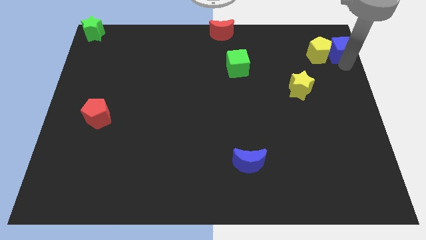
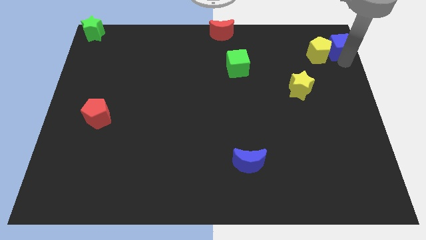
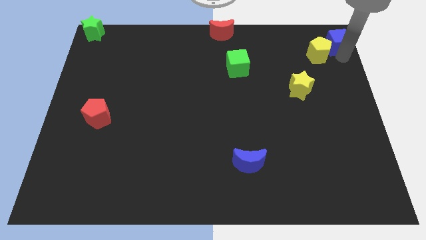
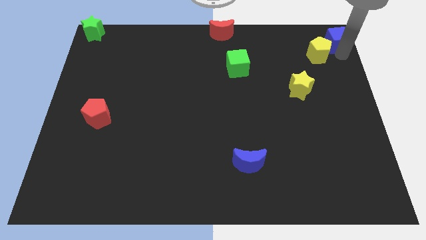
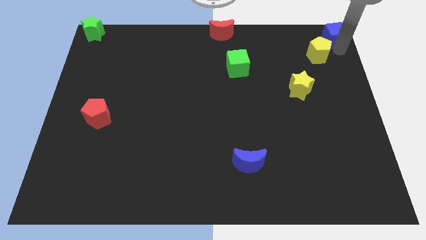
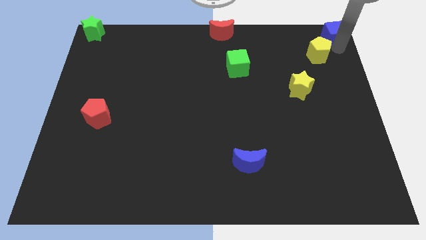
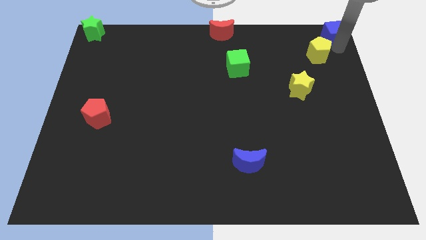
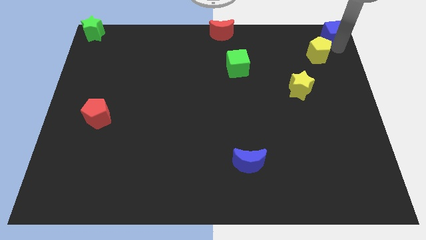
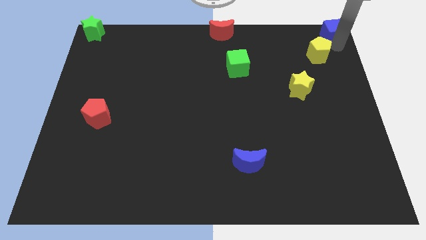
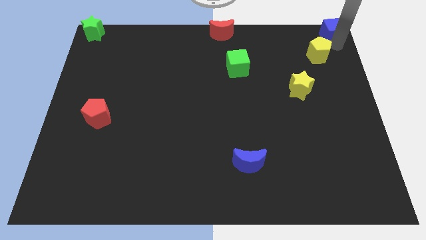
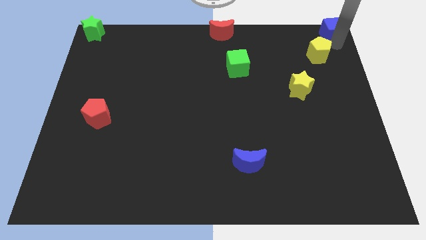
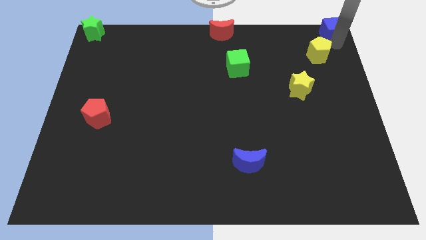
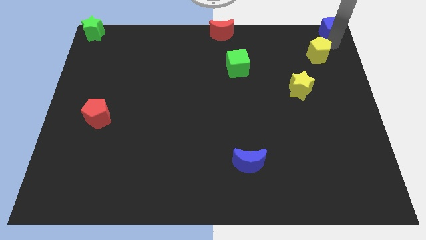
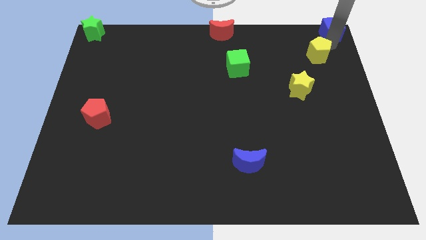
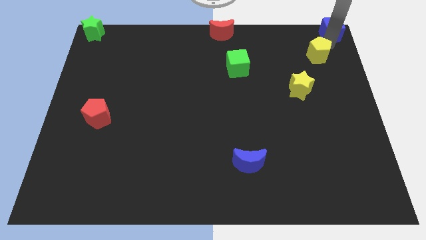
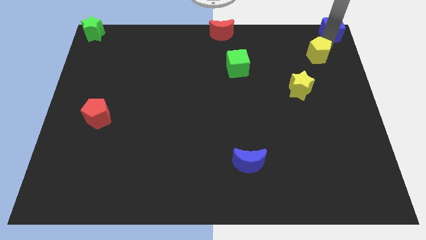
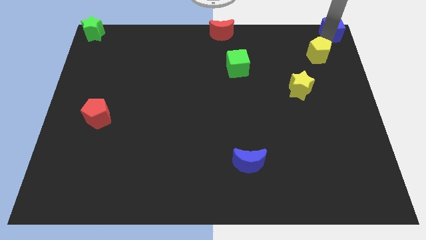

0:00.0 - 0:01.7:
move the blue cube towards the top right of the board

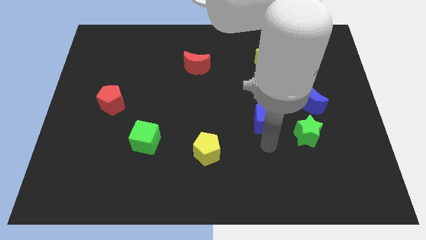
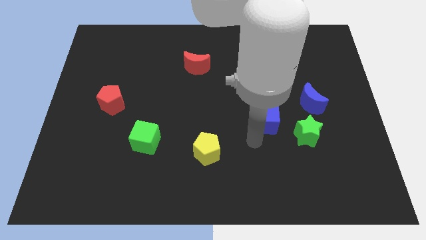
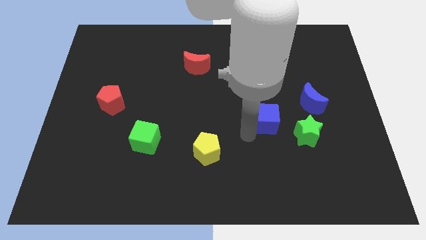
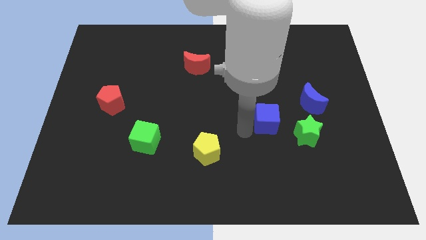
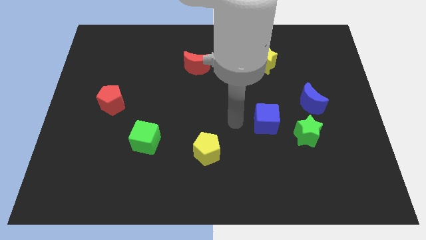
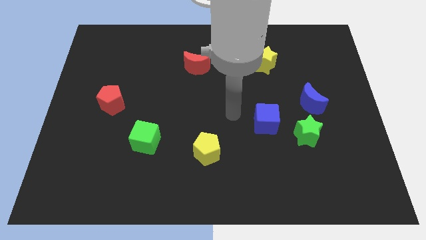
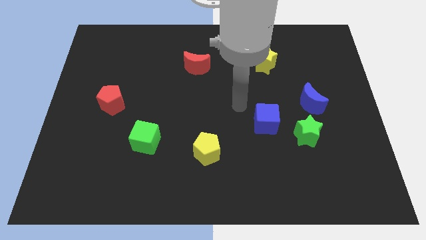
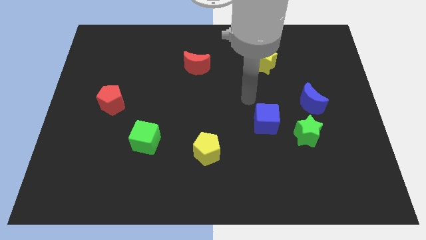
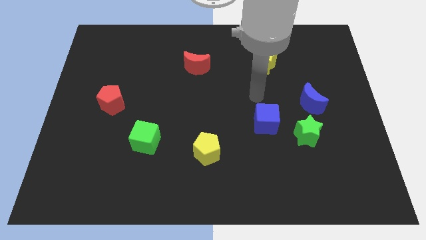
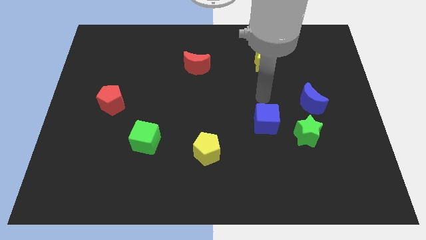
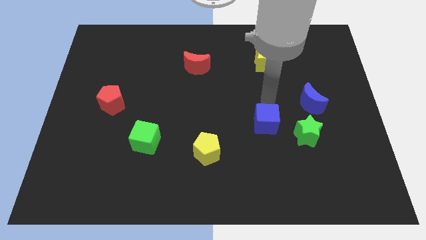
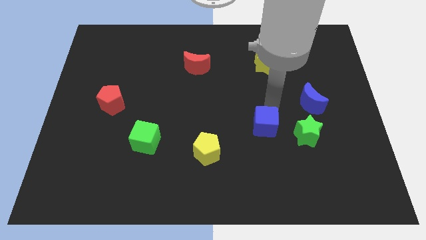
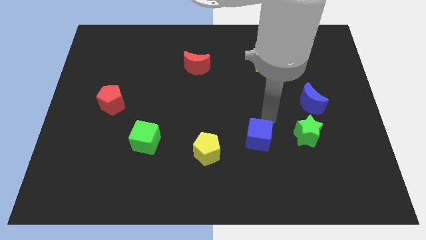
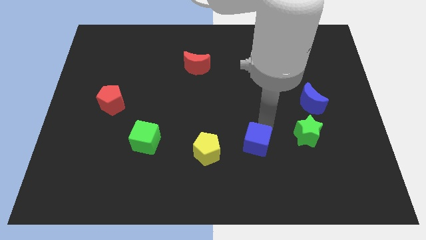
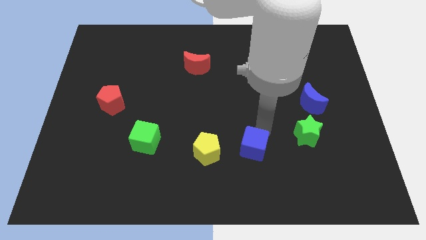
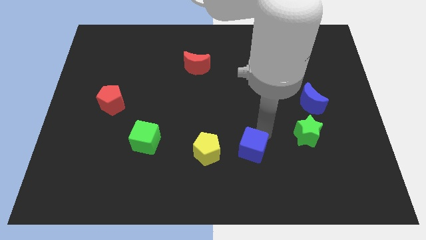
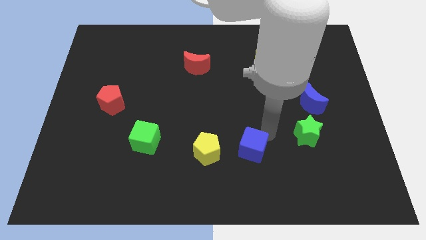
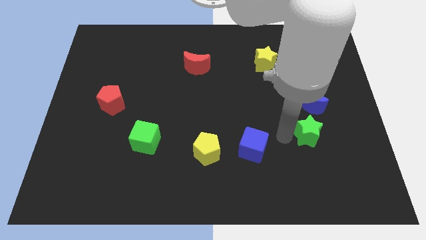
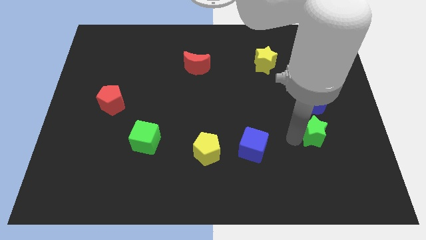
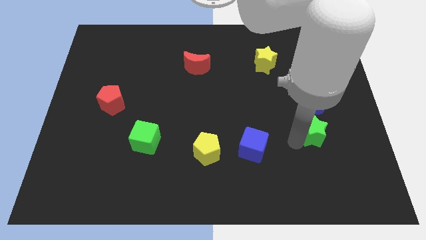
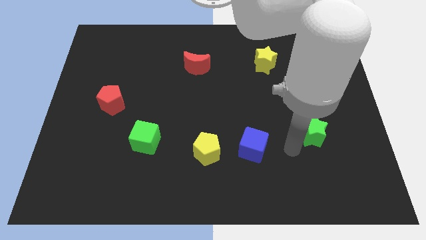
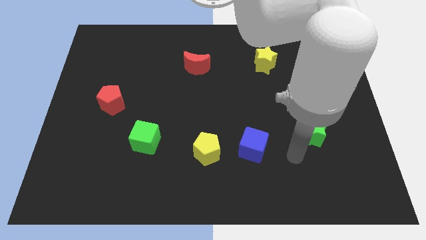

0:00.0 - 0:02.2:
move the blue cube left to the green star

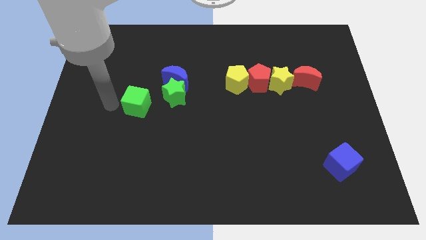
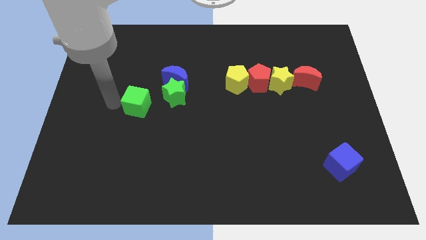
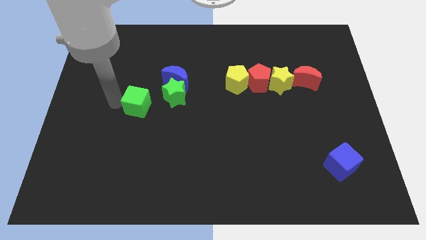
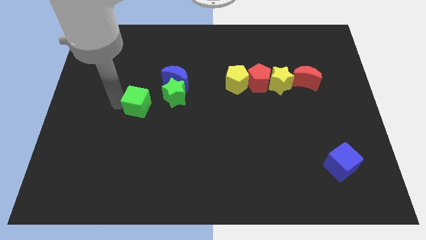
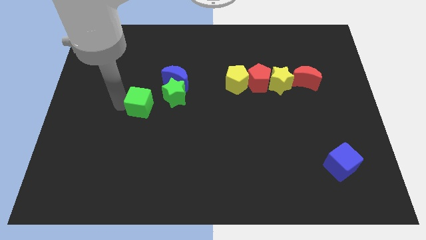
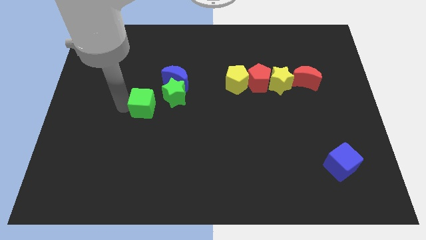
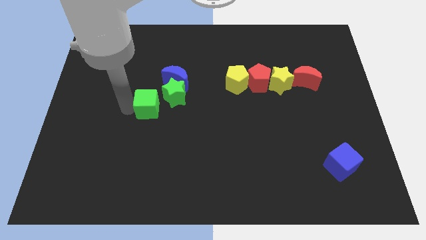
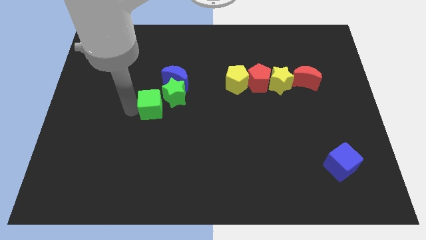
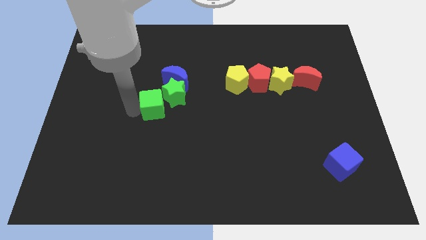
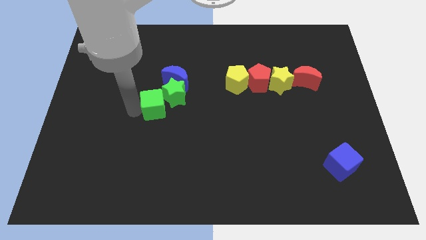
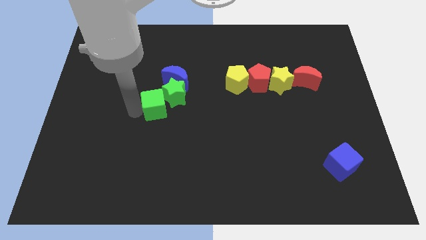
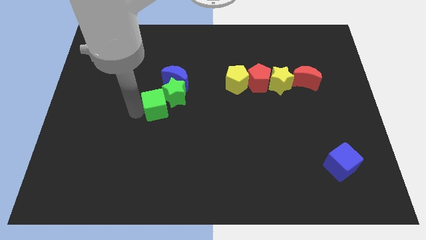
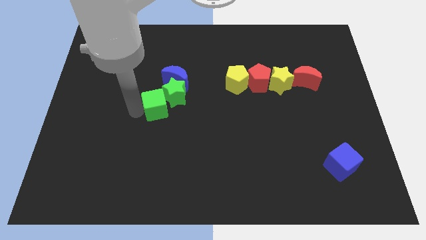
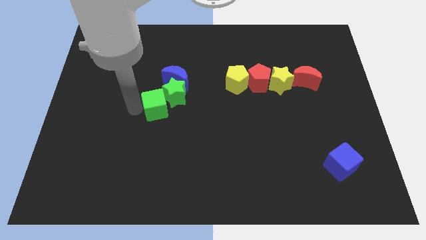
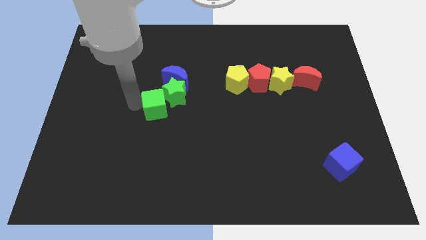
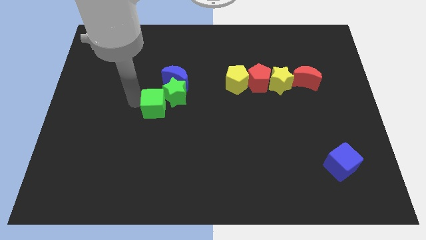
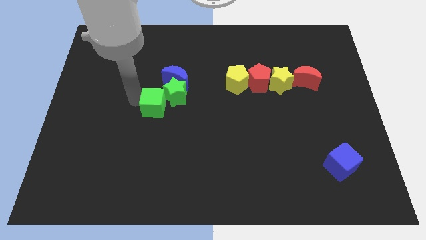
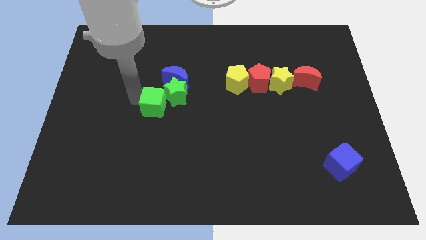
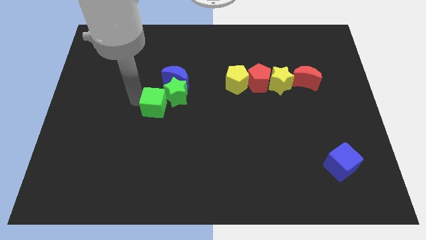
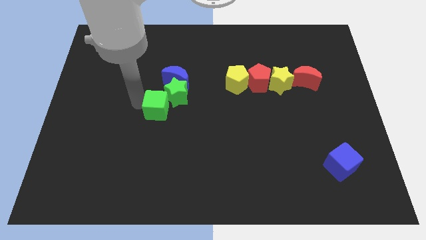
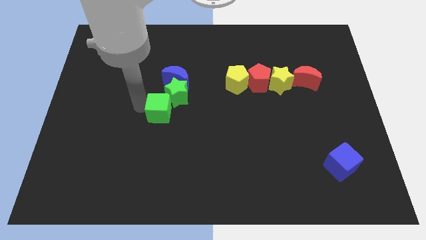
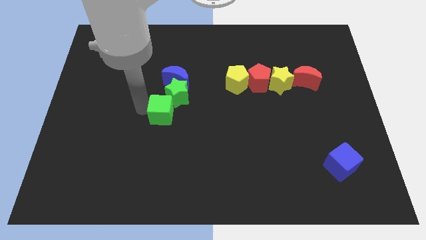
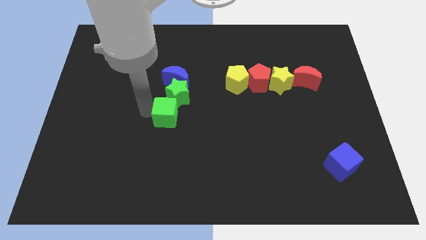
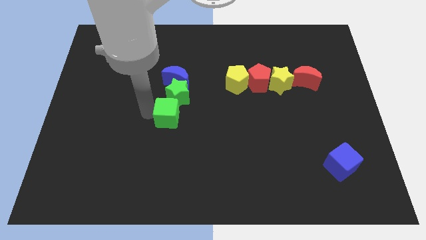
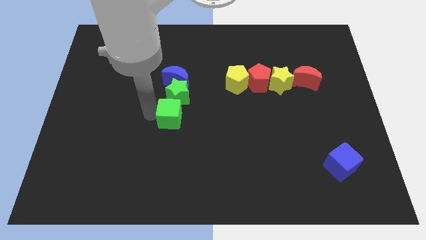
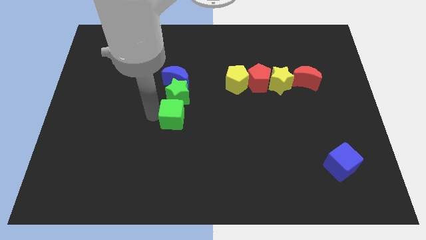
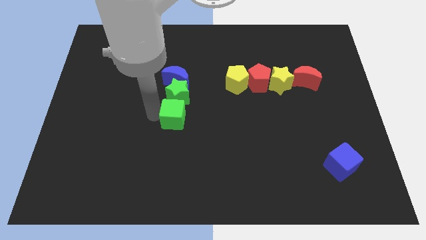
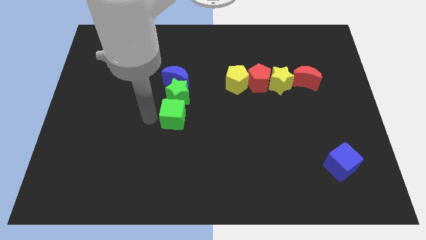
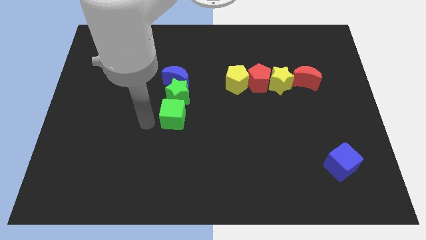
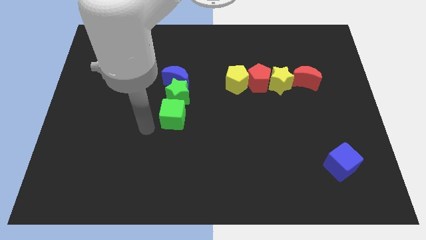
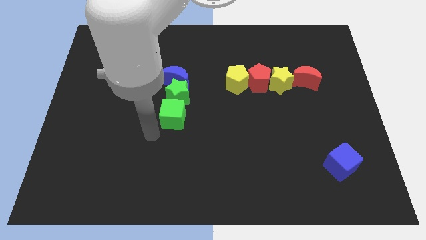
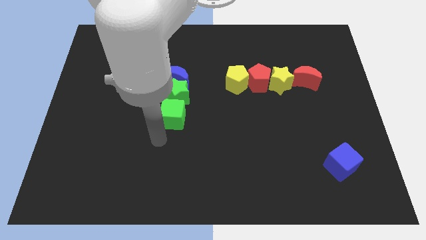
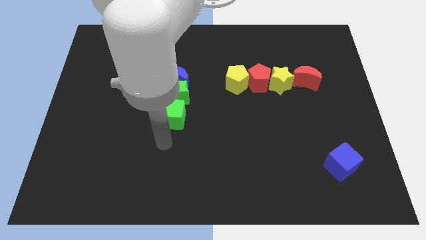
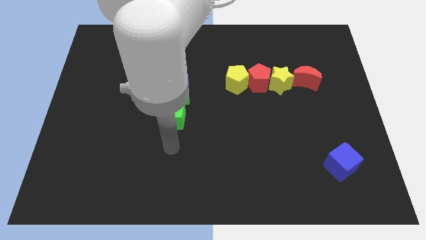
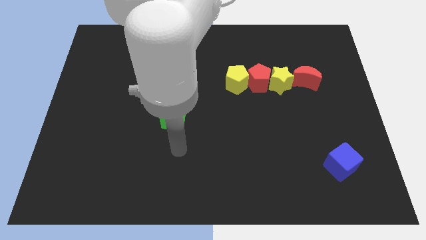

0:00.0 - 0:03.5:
push the green cube to the bottom of the green star

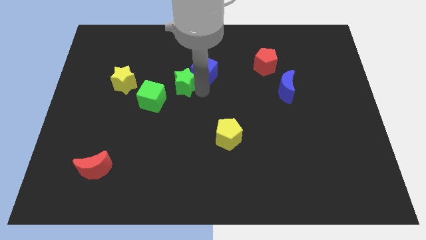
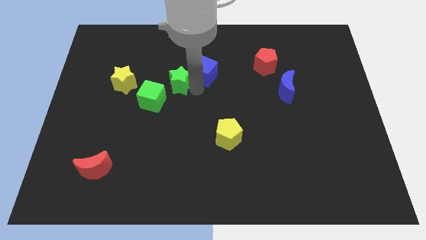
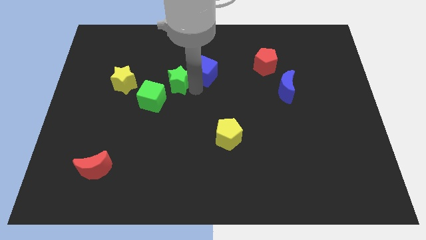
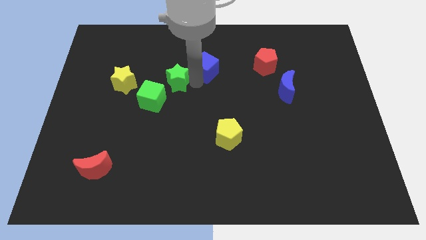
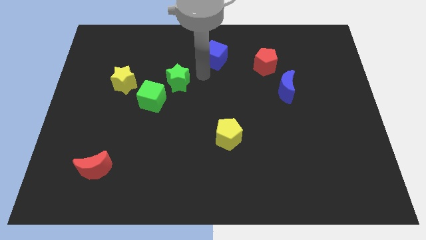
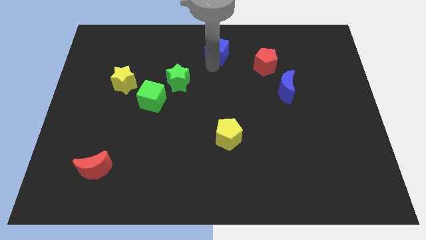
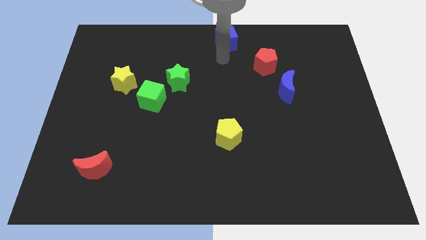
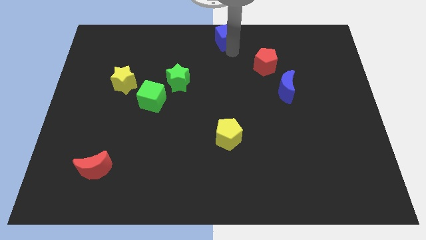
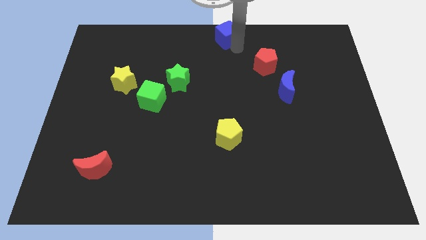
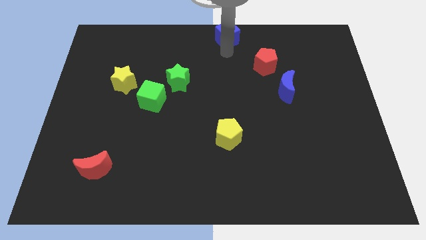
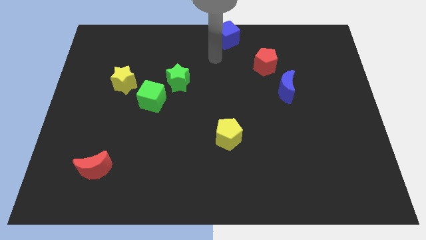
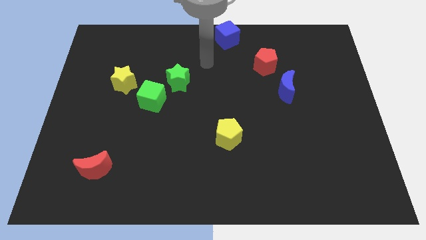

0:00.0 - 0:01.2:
take the blue cube away from the green star

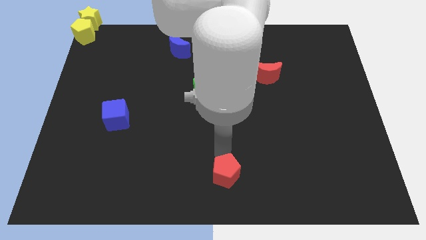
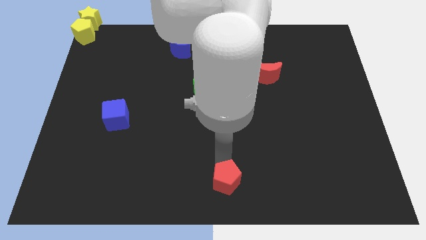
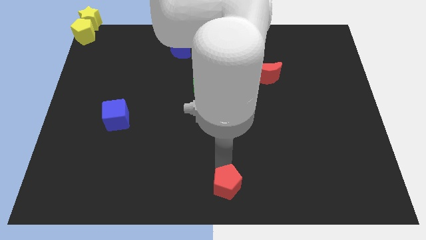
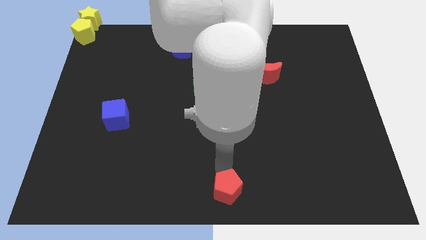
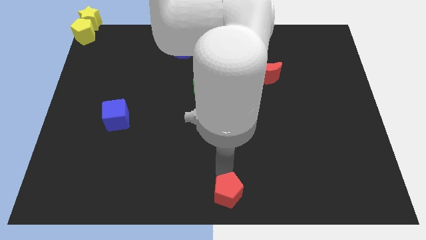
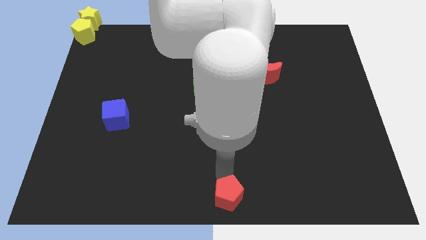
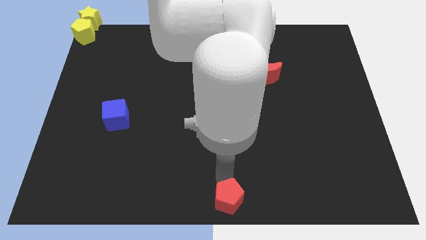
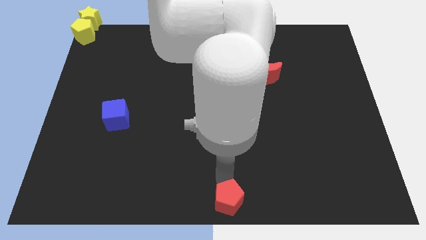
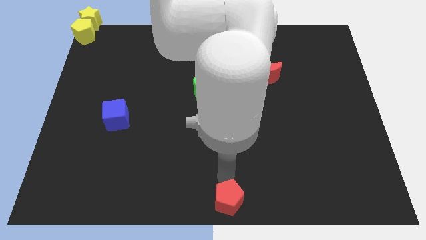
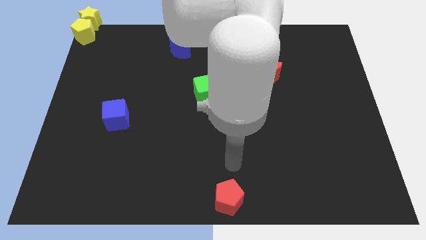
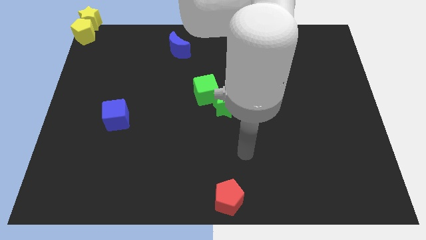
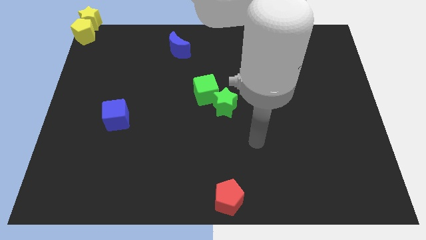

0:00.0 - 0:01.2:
move the red pentagon to the bottom center of the board
